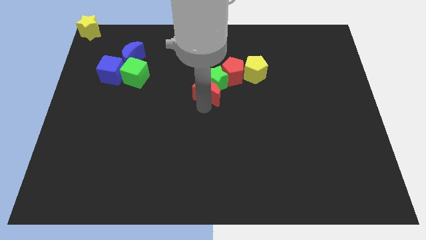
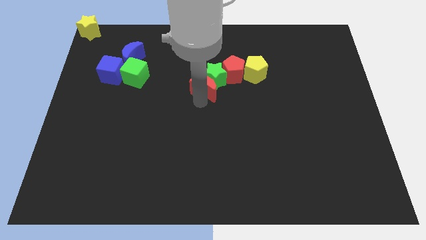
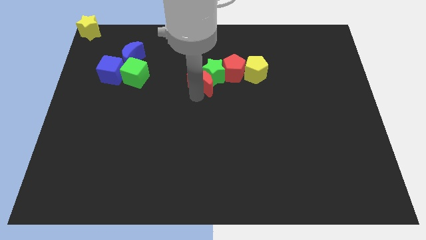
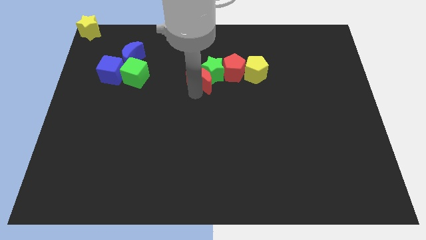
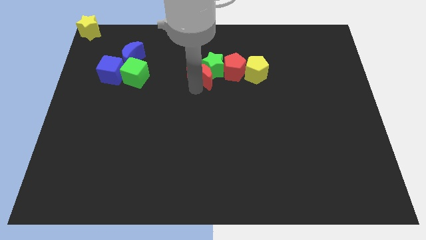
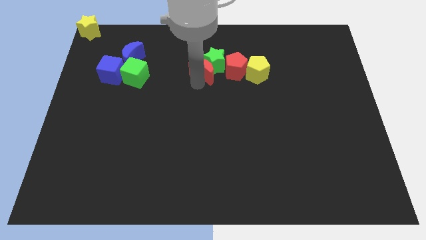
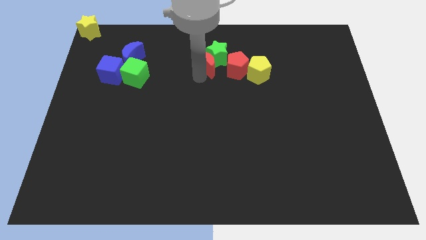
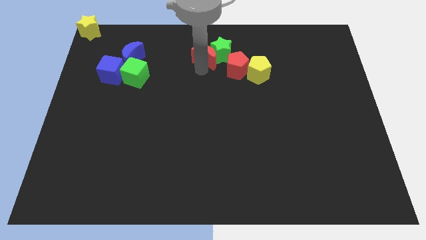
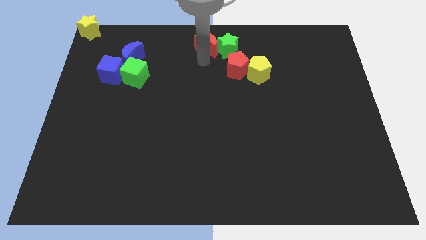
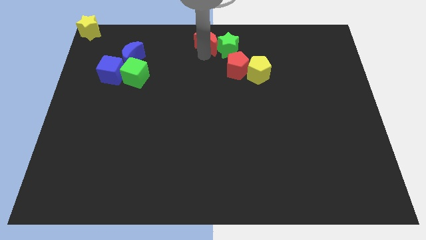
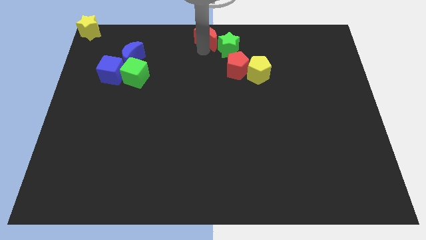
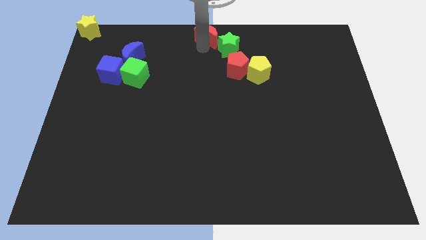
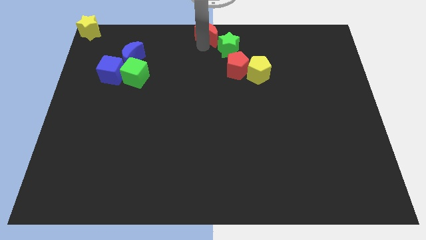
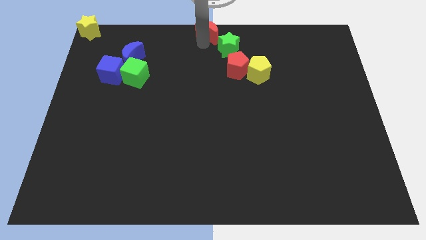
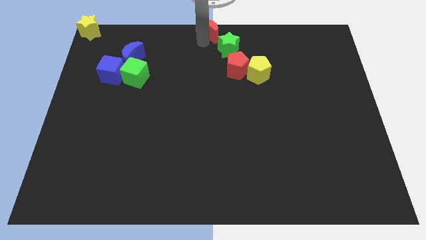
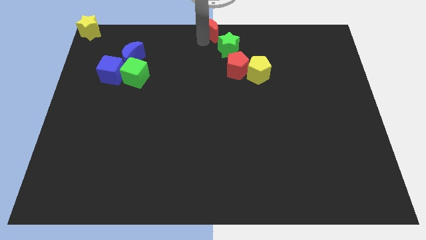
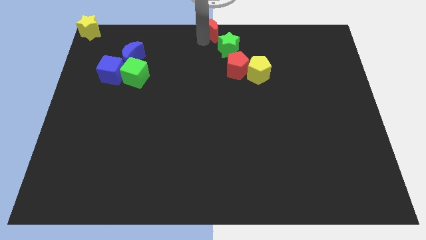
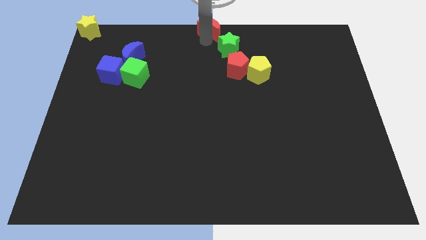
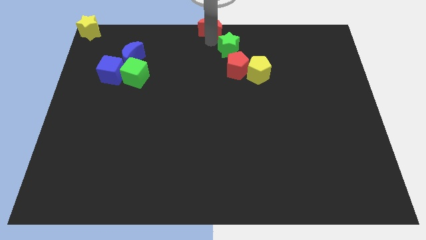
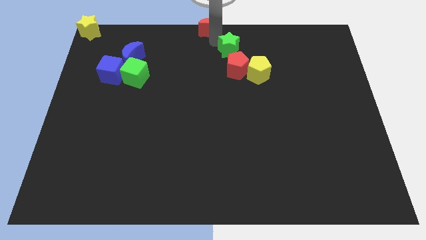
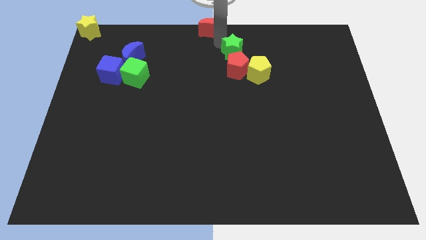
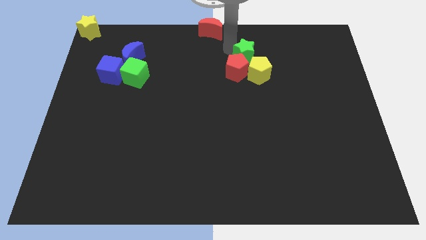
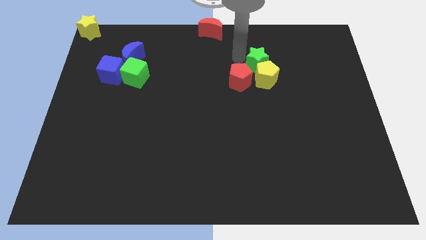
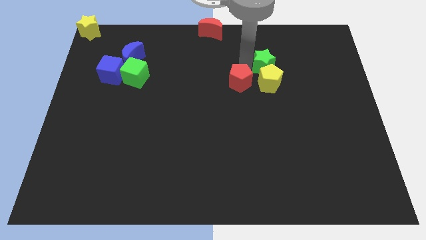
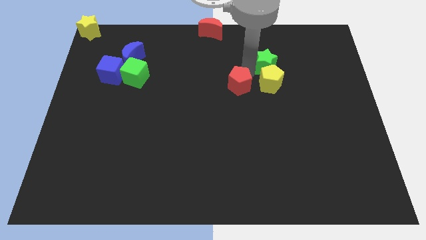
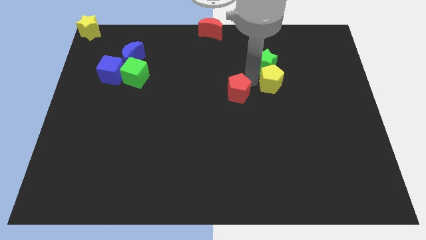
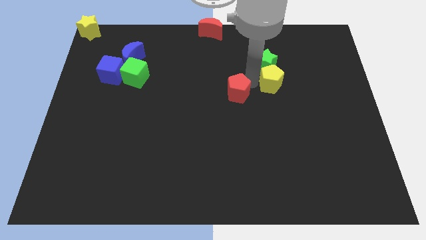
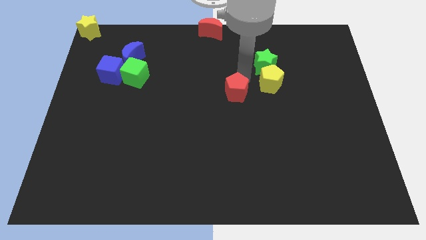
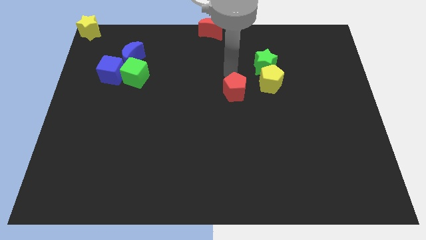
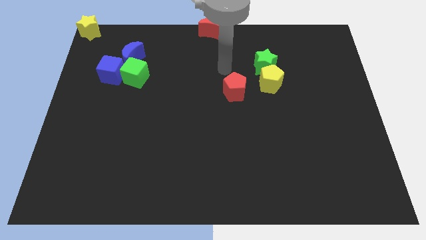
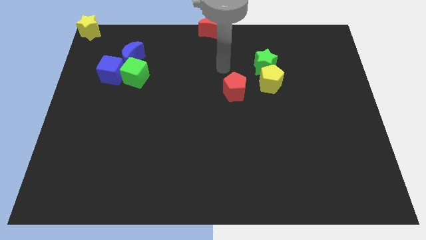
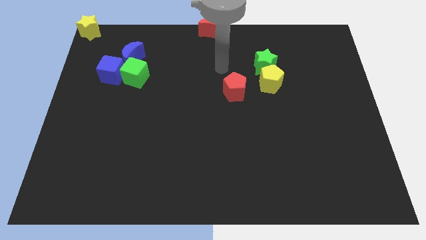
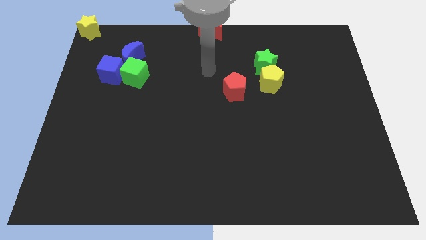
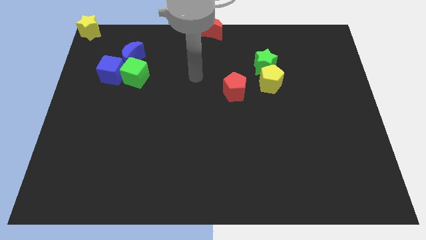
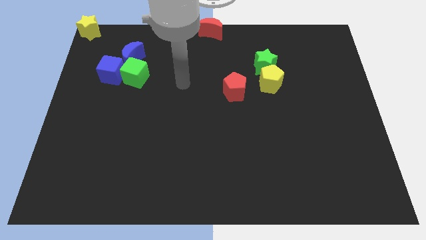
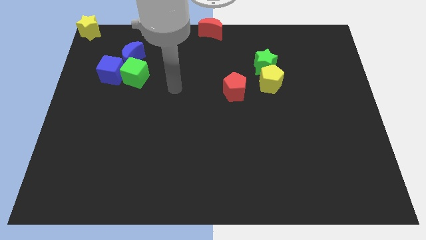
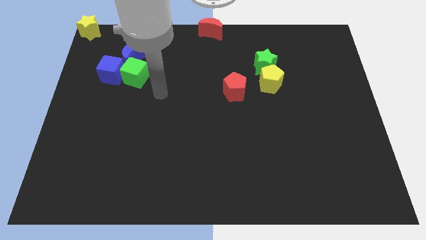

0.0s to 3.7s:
separate the red pentagon and green star

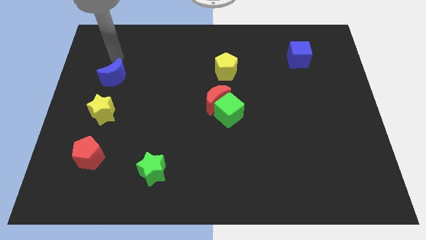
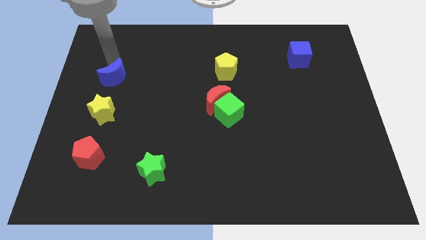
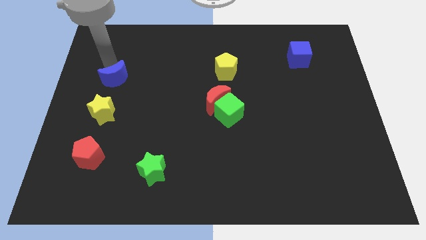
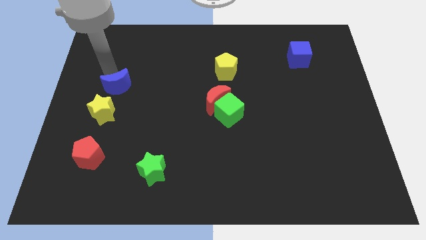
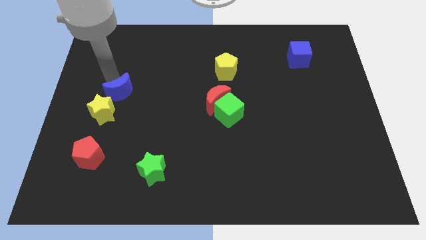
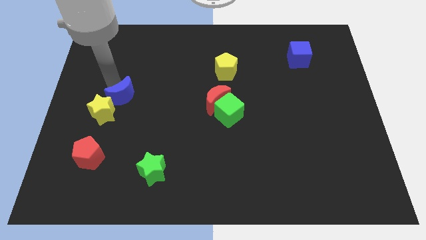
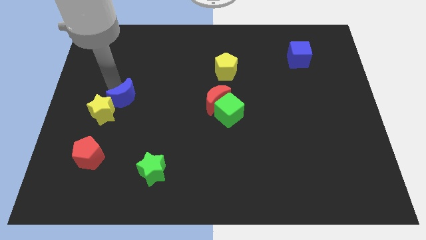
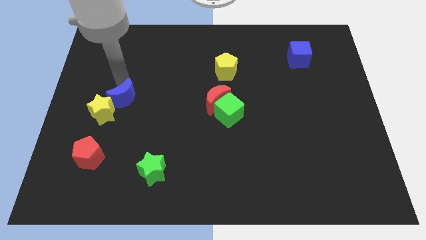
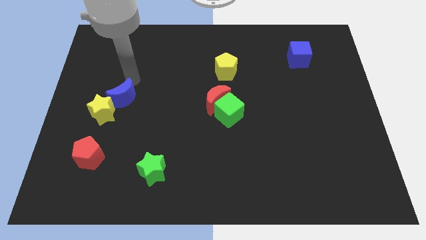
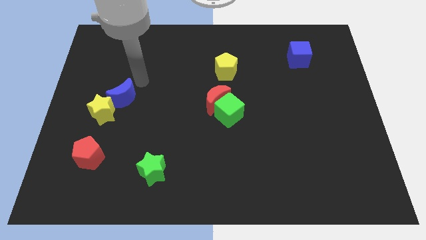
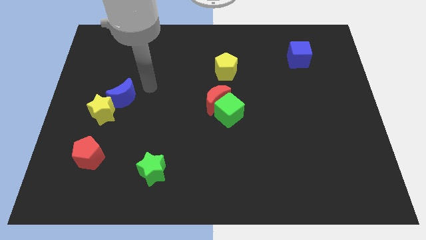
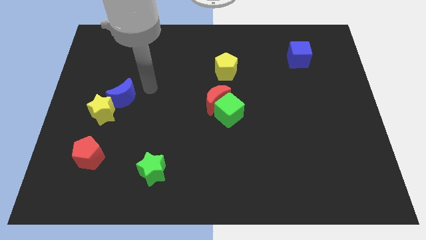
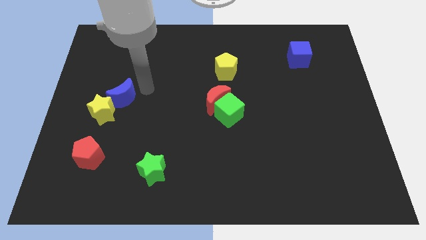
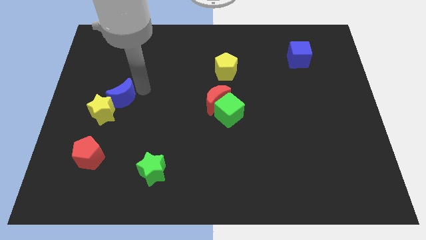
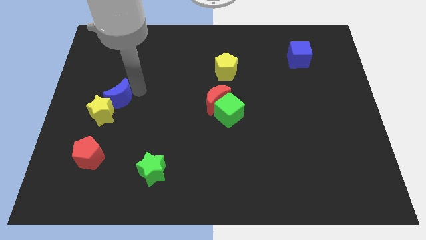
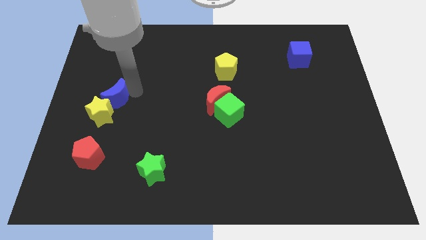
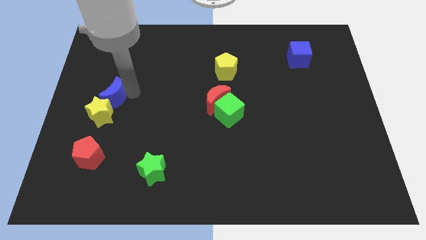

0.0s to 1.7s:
place blue moon into yellow star

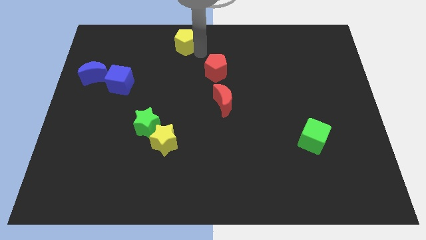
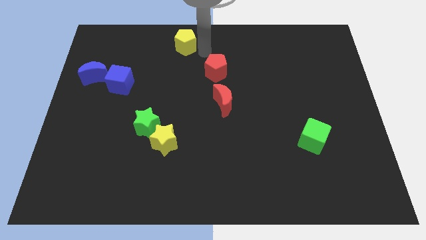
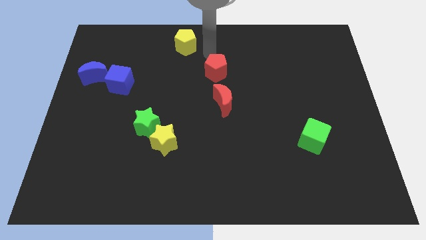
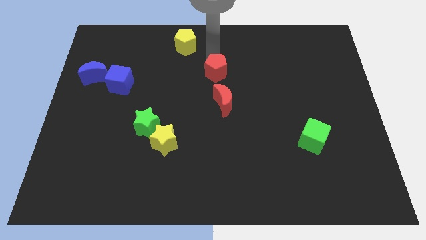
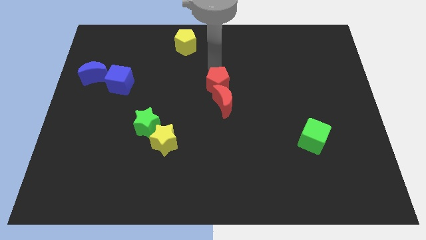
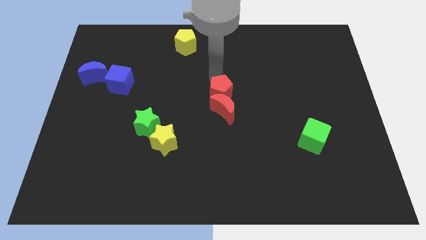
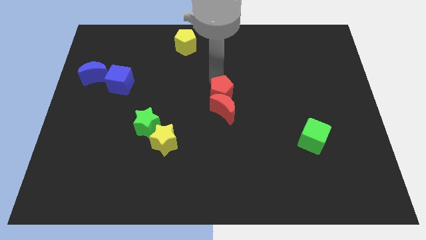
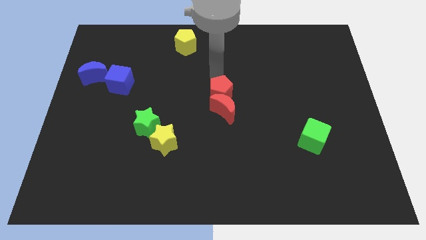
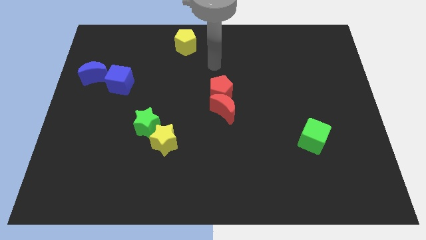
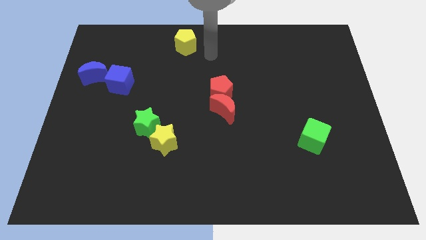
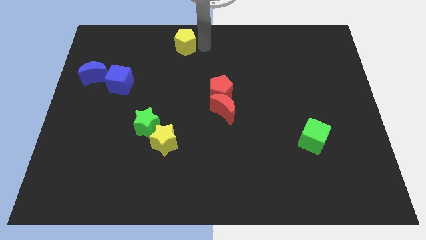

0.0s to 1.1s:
push the red pentagon into the red crescent

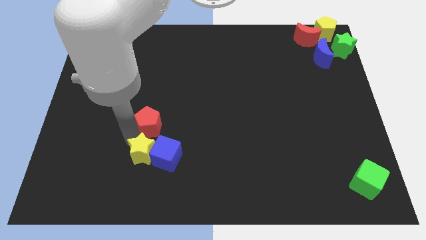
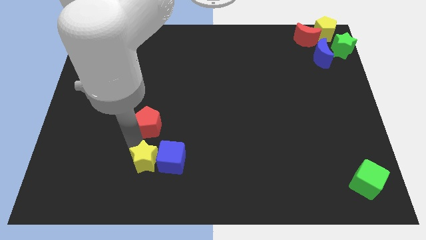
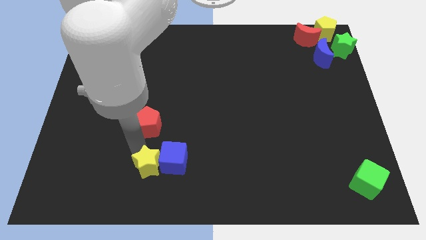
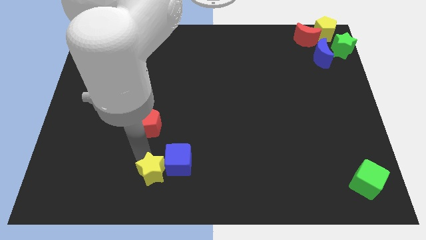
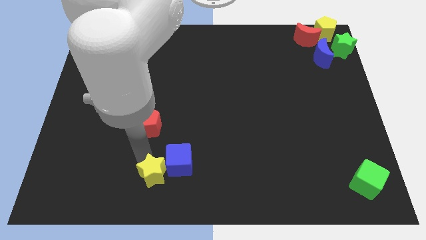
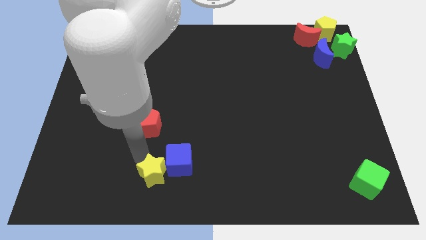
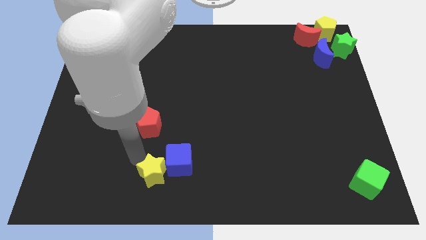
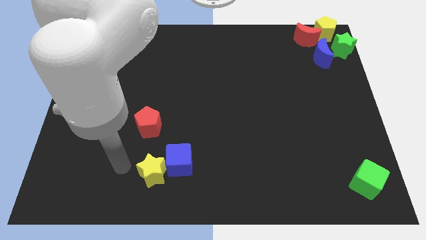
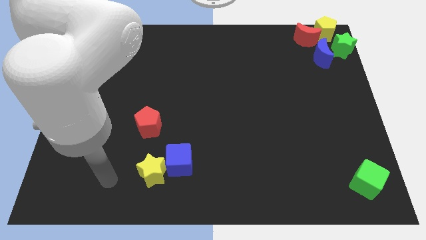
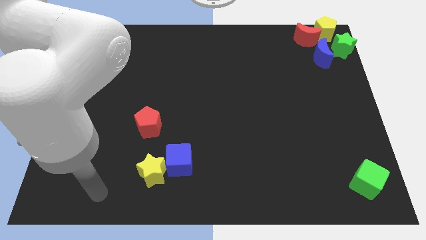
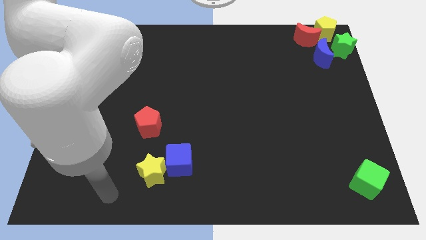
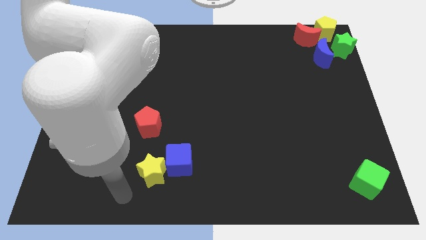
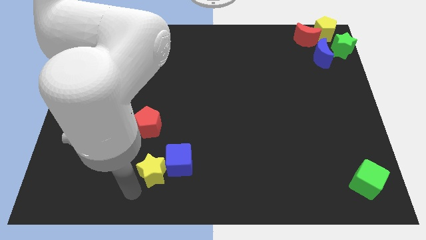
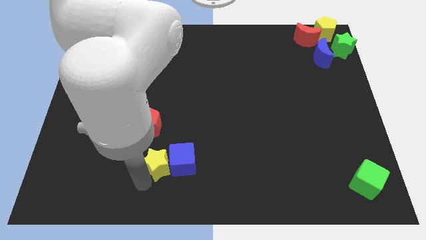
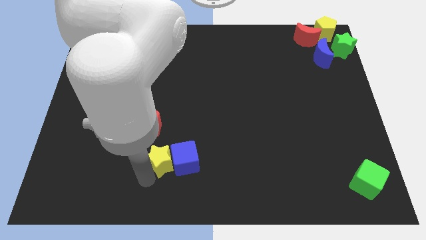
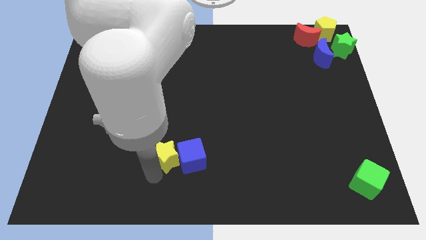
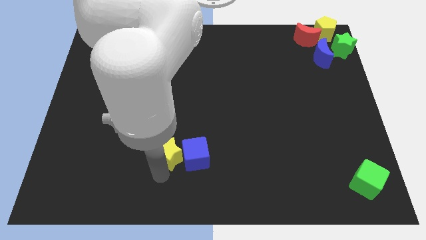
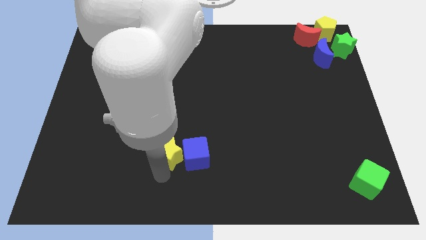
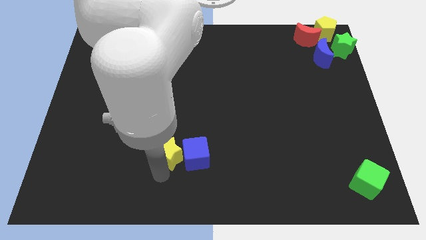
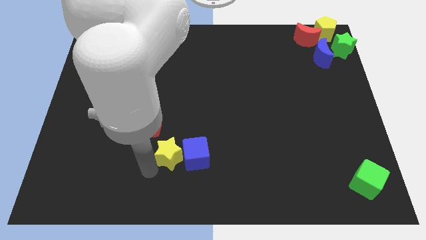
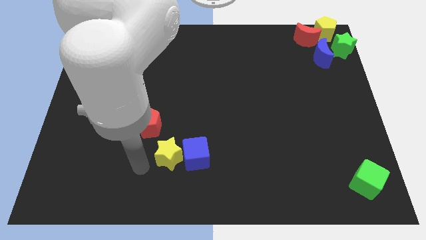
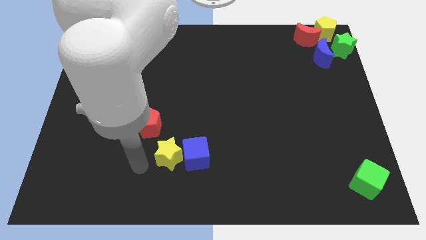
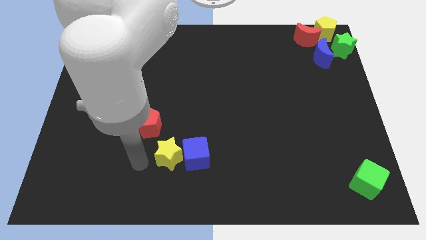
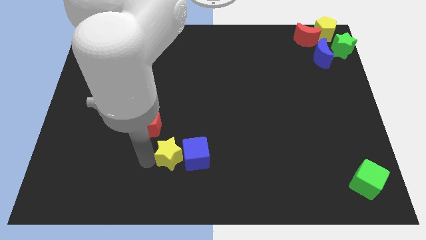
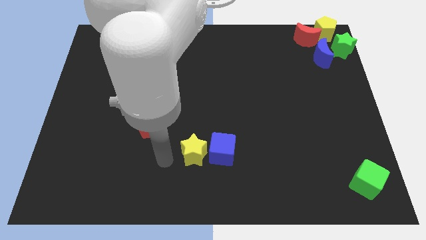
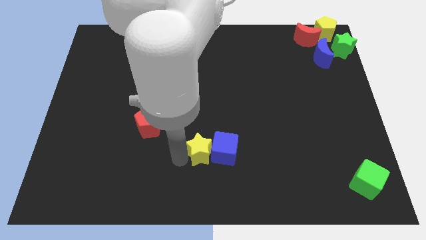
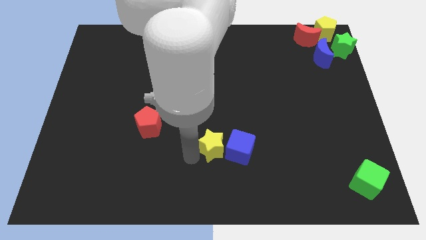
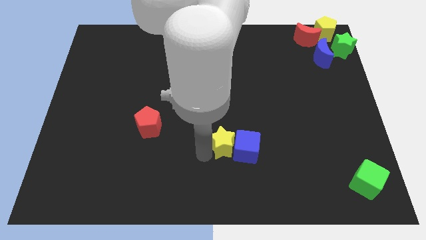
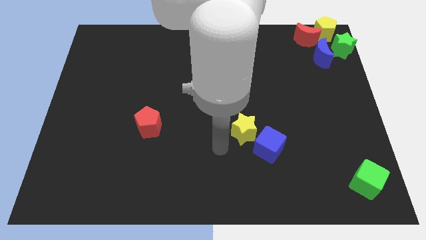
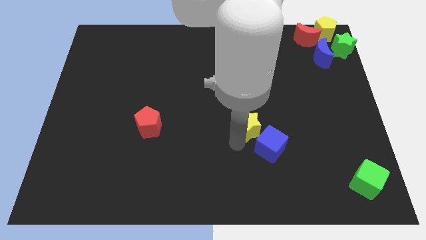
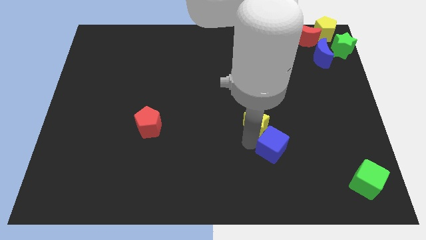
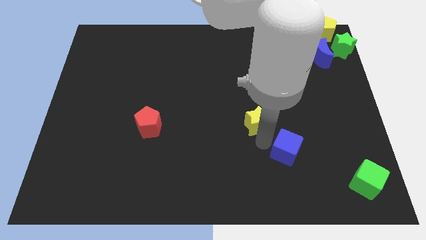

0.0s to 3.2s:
push the yellow star and blue cube to the right side of the table
